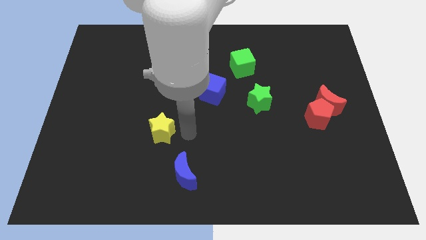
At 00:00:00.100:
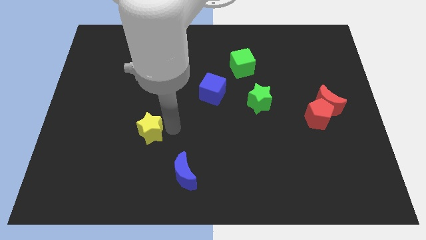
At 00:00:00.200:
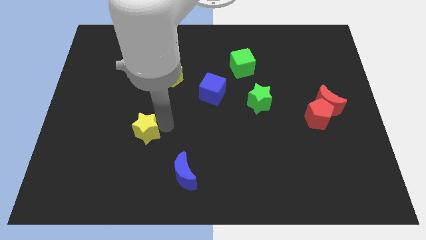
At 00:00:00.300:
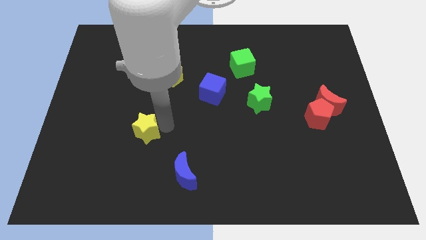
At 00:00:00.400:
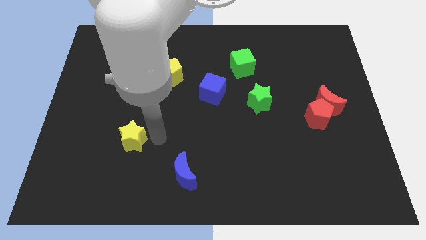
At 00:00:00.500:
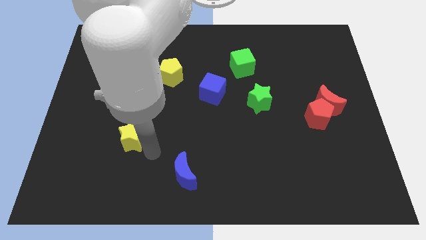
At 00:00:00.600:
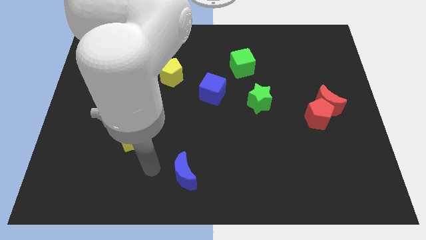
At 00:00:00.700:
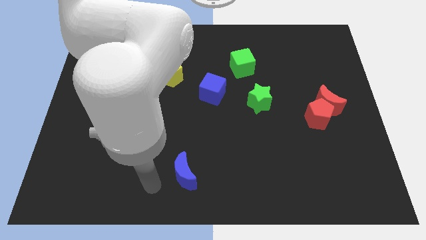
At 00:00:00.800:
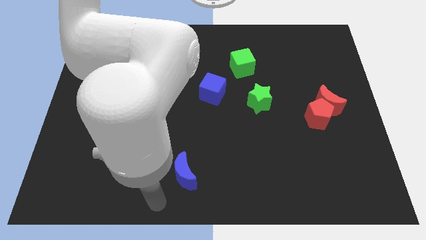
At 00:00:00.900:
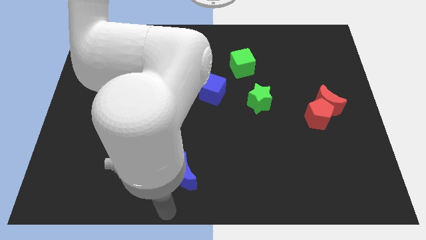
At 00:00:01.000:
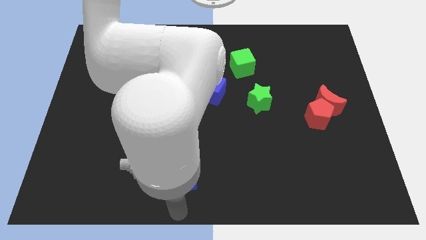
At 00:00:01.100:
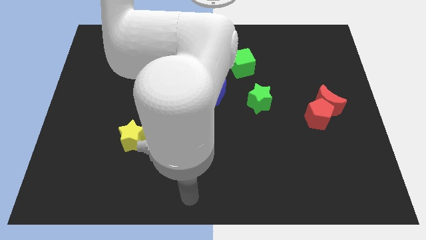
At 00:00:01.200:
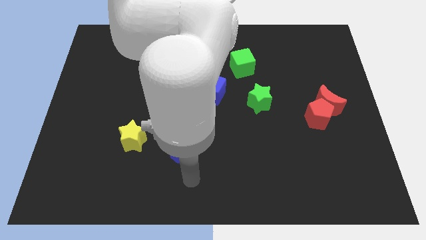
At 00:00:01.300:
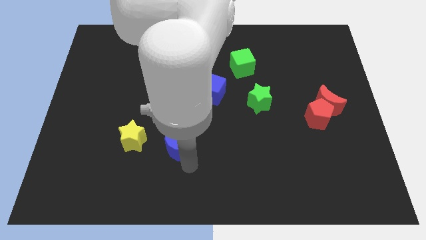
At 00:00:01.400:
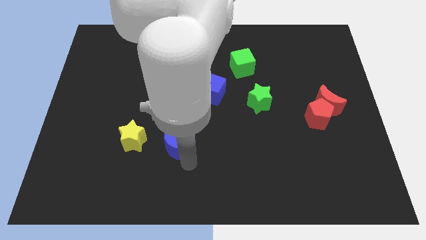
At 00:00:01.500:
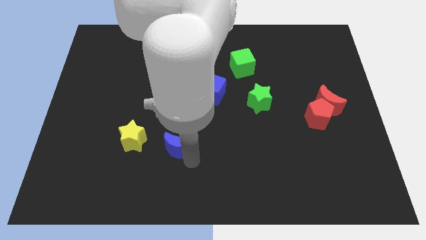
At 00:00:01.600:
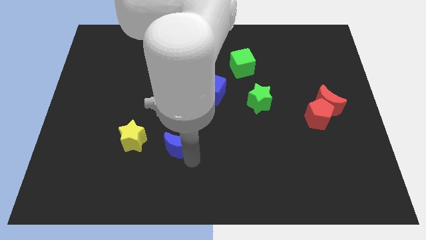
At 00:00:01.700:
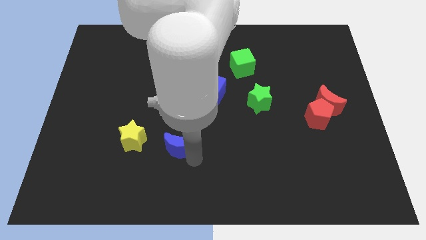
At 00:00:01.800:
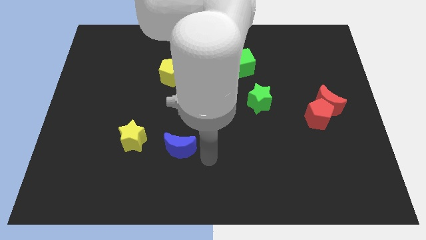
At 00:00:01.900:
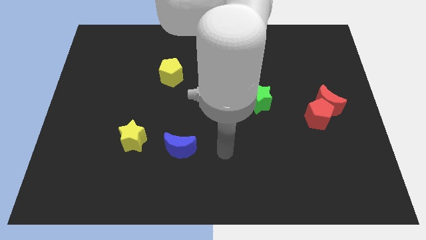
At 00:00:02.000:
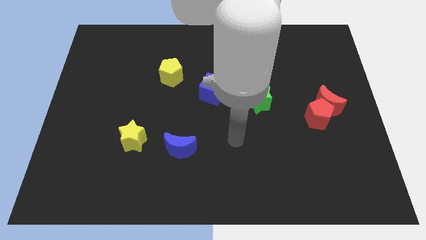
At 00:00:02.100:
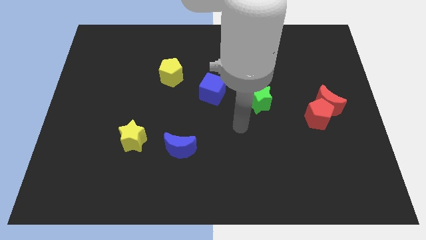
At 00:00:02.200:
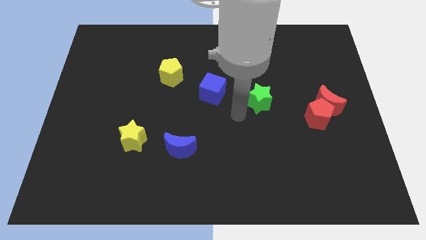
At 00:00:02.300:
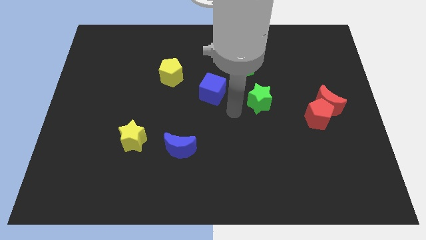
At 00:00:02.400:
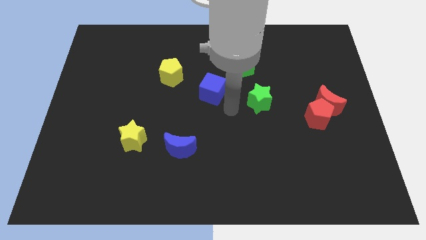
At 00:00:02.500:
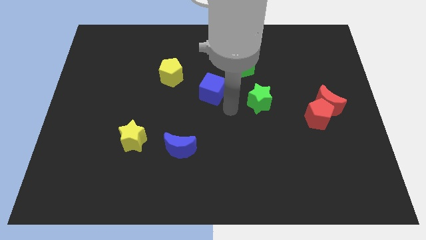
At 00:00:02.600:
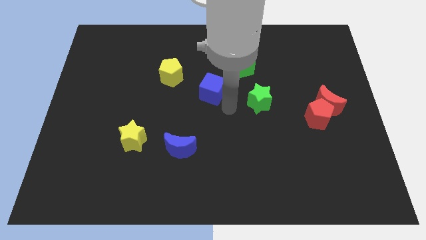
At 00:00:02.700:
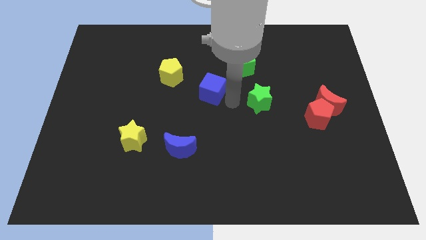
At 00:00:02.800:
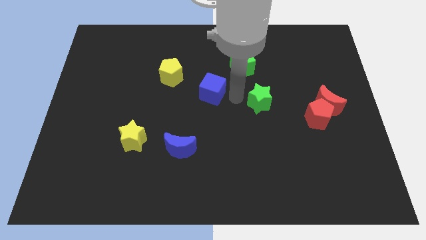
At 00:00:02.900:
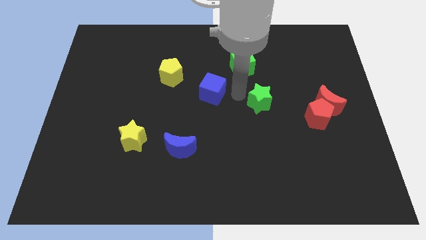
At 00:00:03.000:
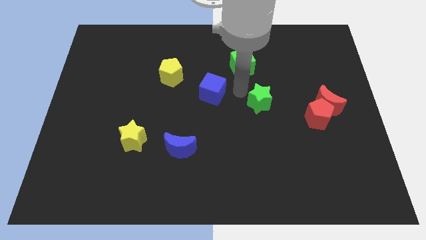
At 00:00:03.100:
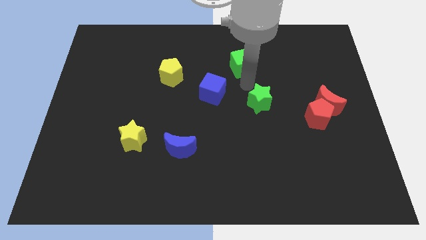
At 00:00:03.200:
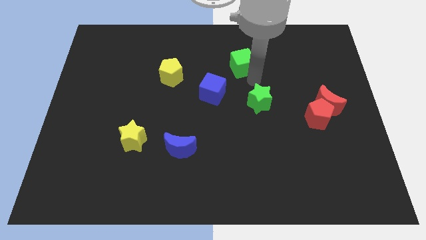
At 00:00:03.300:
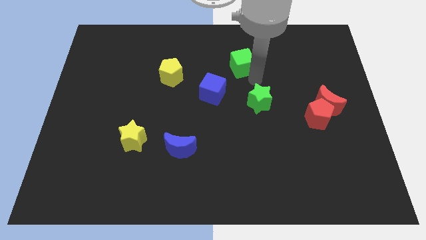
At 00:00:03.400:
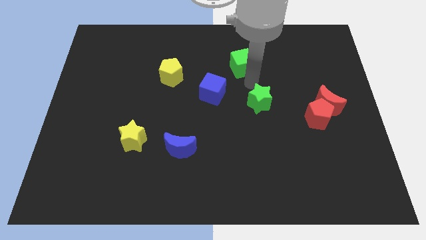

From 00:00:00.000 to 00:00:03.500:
point your arm between green star and green cube

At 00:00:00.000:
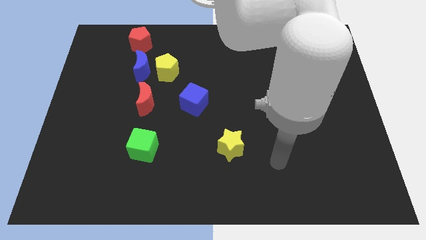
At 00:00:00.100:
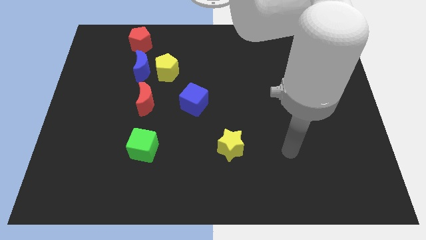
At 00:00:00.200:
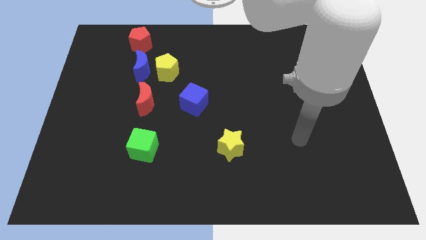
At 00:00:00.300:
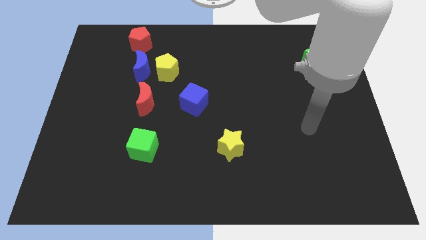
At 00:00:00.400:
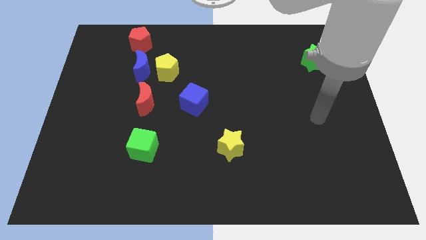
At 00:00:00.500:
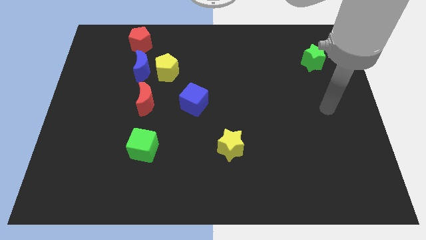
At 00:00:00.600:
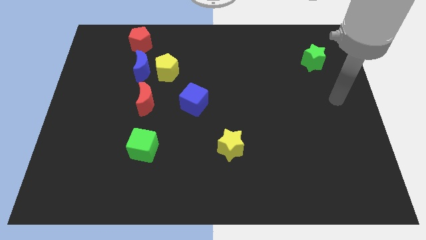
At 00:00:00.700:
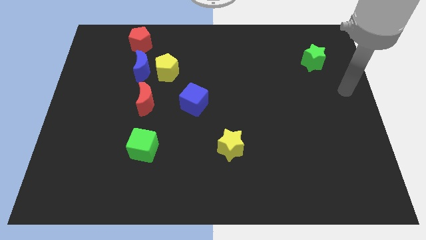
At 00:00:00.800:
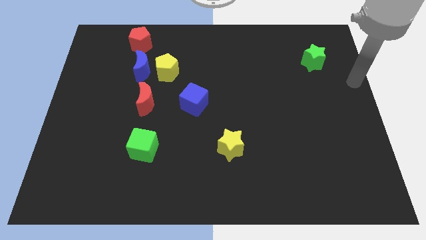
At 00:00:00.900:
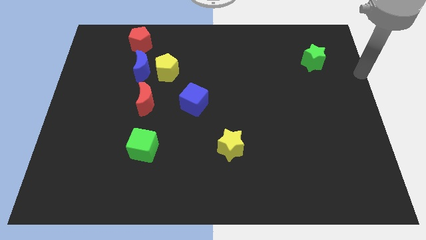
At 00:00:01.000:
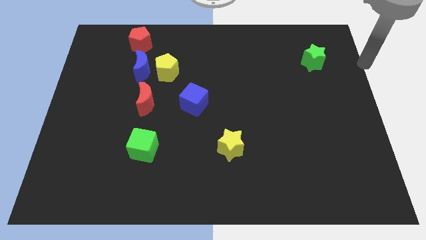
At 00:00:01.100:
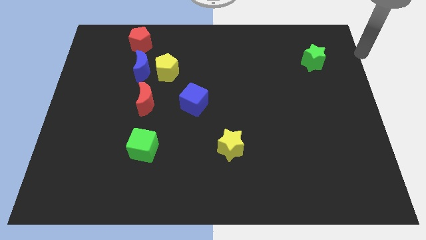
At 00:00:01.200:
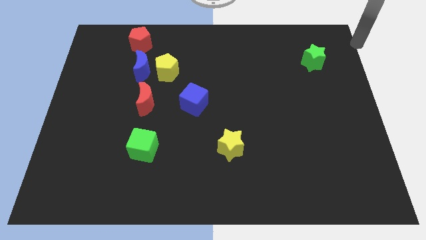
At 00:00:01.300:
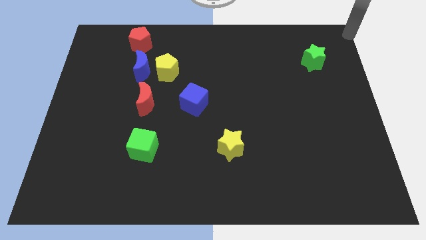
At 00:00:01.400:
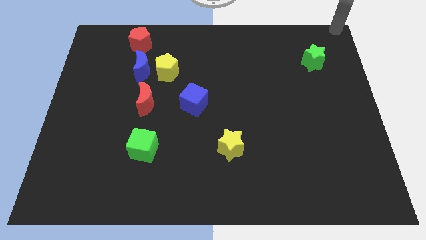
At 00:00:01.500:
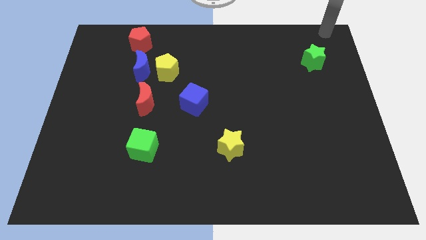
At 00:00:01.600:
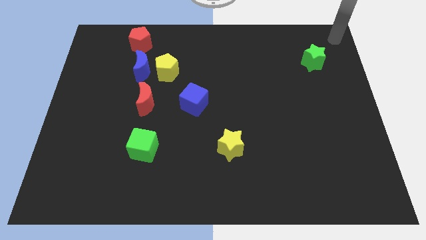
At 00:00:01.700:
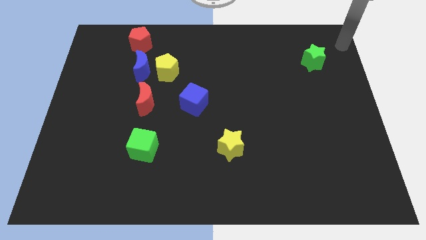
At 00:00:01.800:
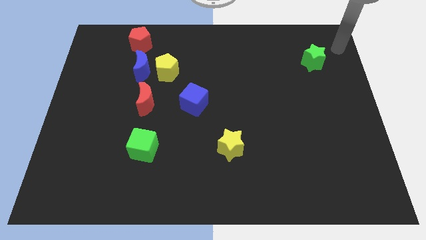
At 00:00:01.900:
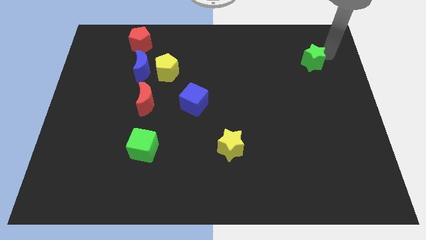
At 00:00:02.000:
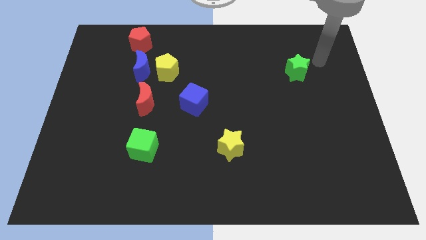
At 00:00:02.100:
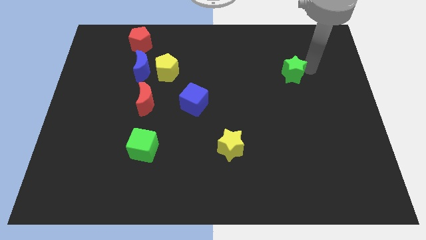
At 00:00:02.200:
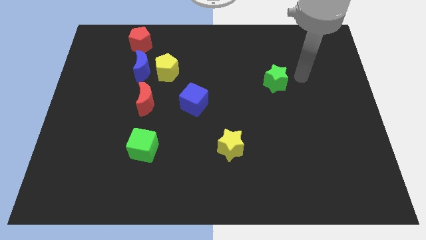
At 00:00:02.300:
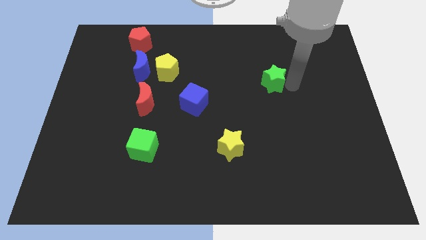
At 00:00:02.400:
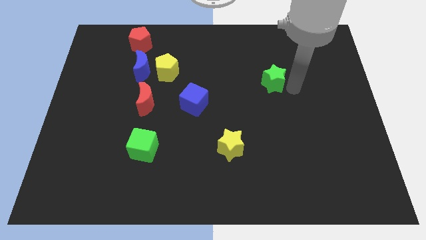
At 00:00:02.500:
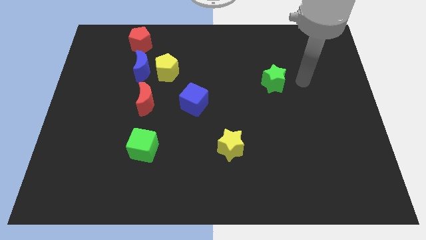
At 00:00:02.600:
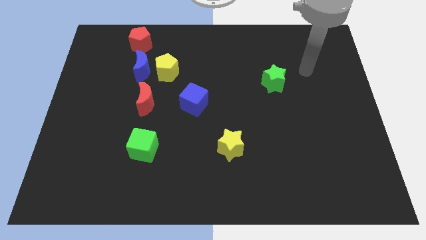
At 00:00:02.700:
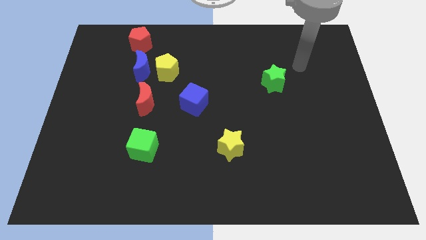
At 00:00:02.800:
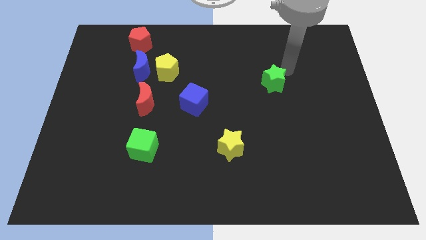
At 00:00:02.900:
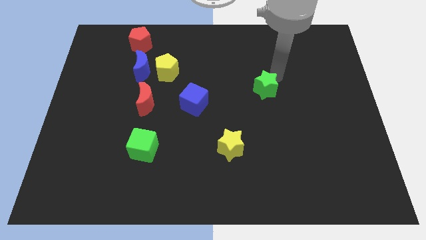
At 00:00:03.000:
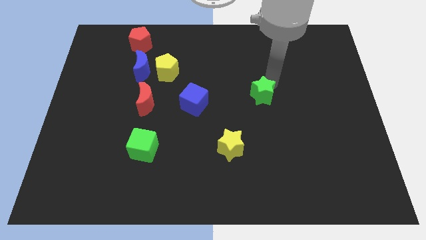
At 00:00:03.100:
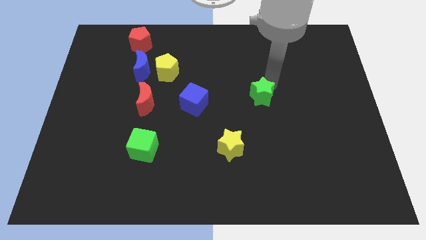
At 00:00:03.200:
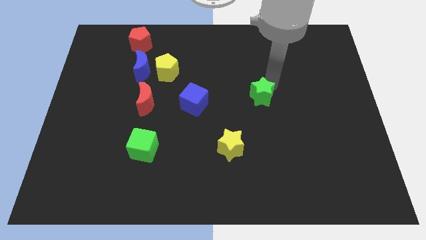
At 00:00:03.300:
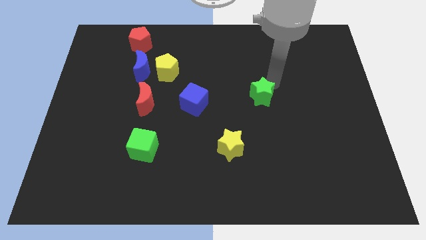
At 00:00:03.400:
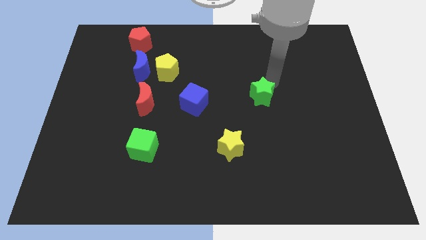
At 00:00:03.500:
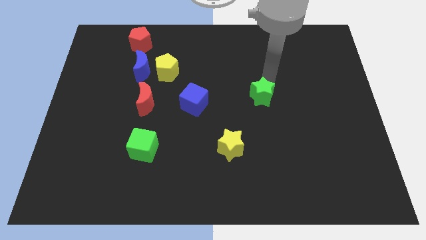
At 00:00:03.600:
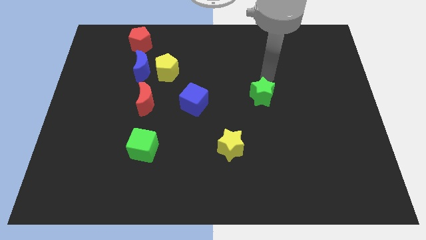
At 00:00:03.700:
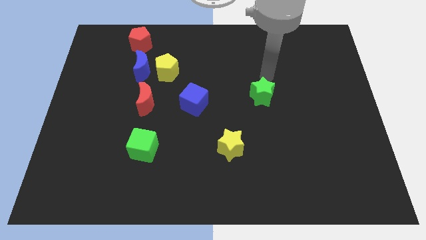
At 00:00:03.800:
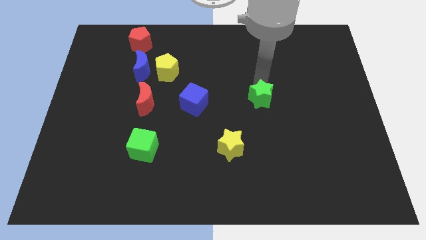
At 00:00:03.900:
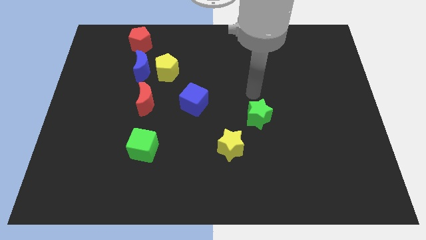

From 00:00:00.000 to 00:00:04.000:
move the green star to the right of the blue cube

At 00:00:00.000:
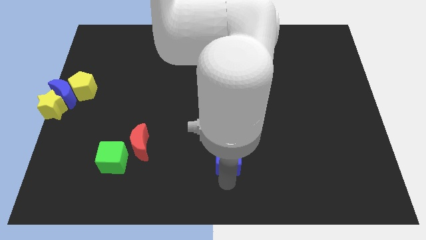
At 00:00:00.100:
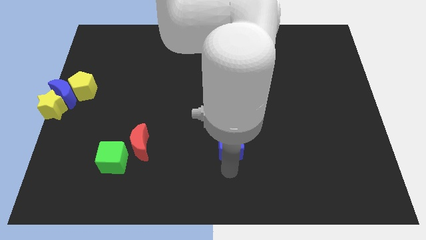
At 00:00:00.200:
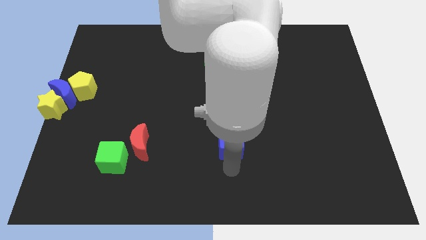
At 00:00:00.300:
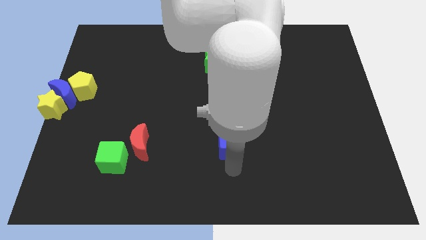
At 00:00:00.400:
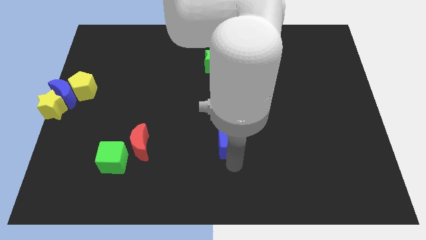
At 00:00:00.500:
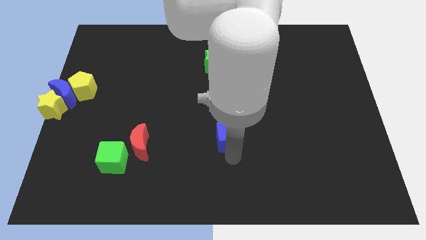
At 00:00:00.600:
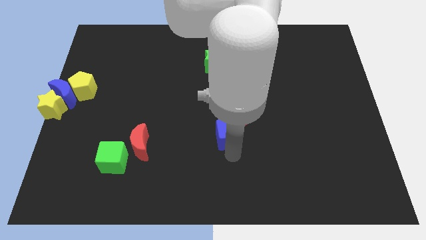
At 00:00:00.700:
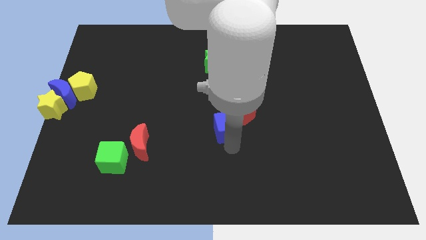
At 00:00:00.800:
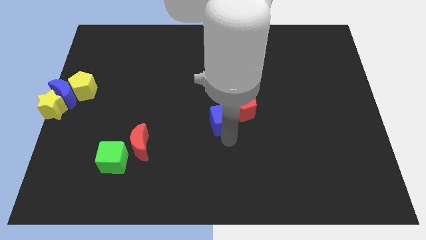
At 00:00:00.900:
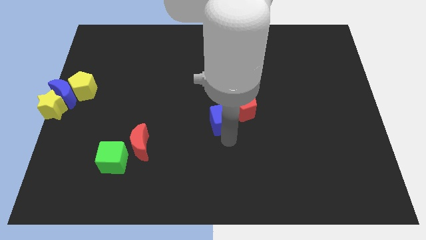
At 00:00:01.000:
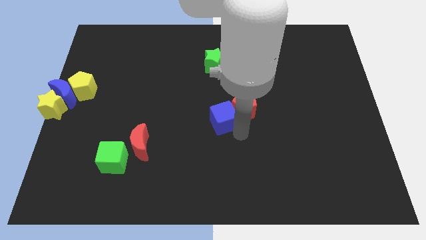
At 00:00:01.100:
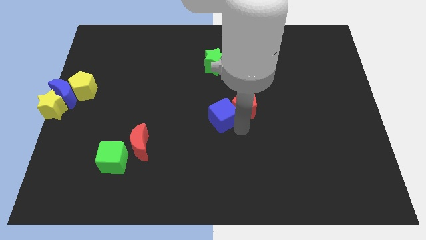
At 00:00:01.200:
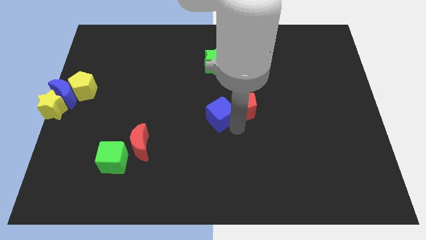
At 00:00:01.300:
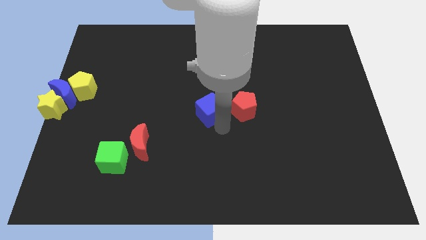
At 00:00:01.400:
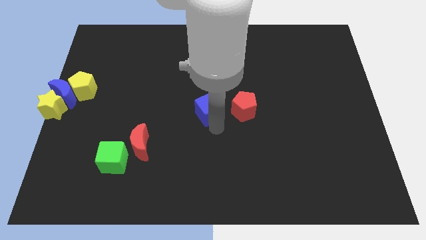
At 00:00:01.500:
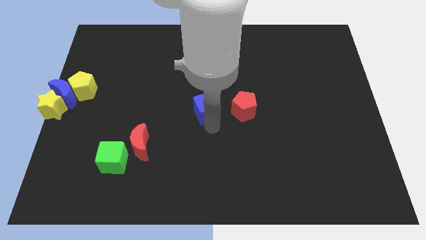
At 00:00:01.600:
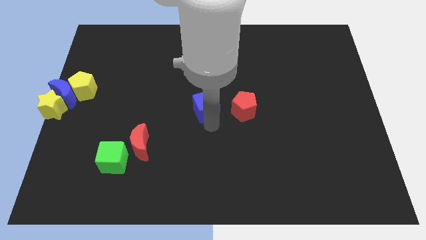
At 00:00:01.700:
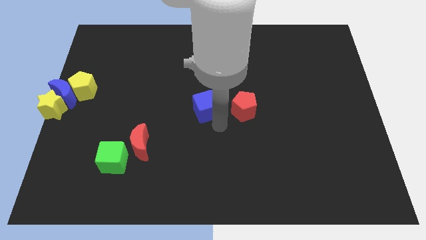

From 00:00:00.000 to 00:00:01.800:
place the blue cube to the left of red pentagon
